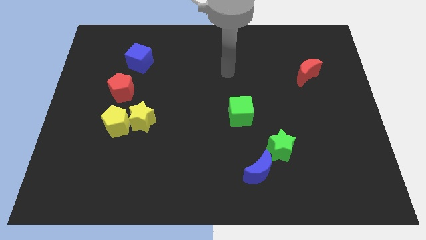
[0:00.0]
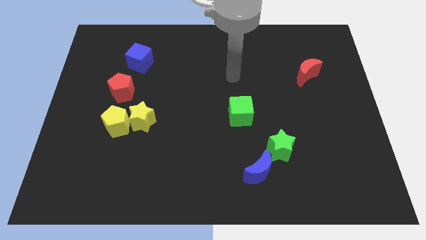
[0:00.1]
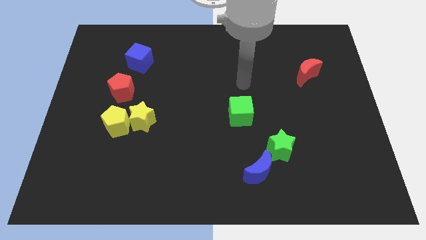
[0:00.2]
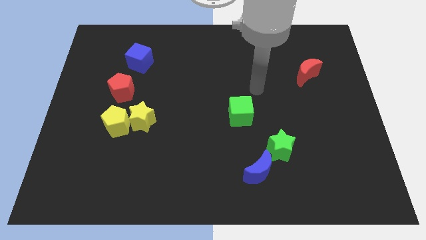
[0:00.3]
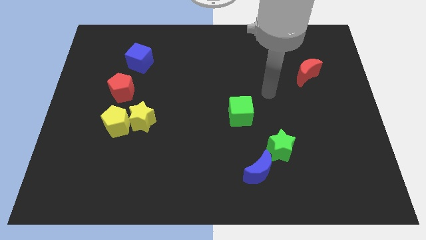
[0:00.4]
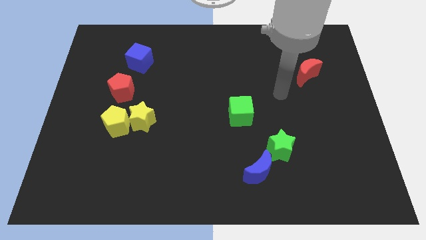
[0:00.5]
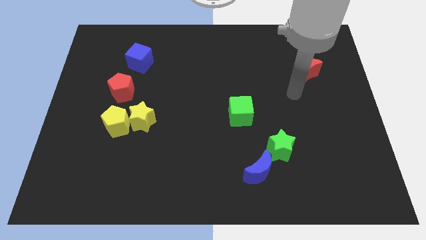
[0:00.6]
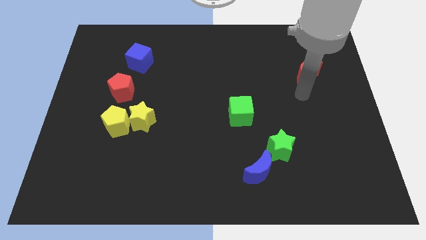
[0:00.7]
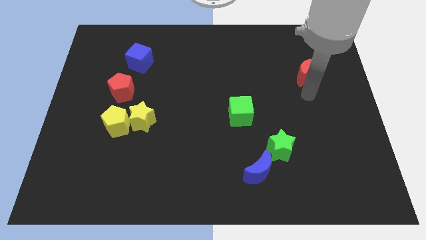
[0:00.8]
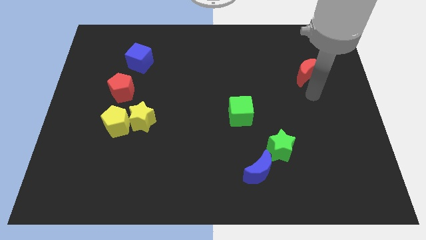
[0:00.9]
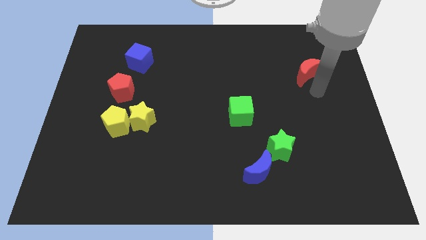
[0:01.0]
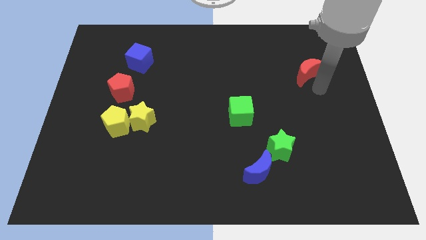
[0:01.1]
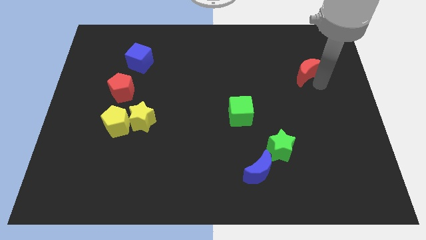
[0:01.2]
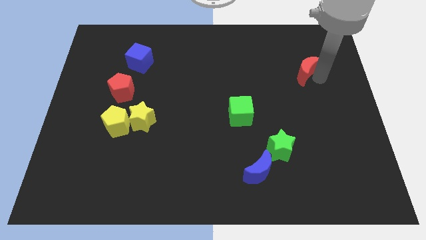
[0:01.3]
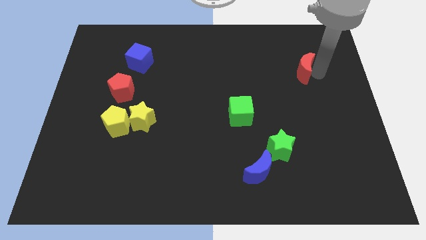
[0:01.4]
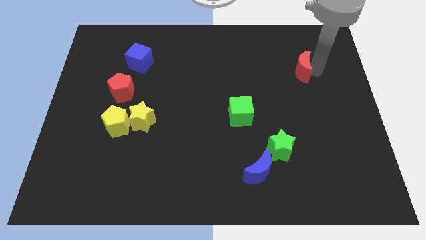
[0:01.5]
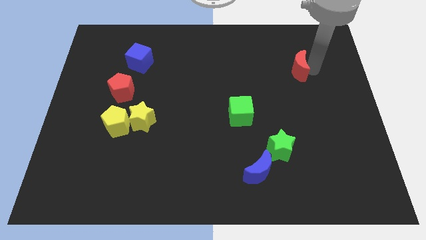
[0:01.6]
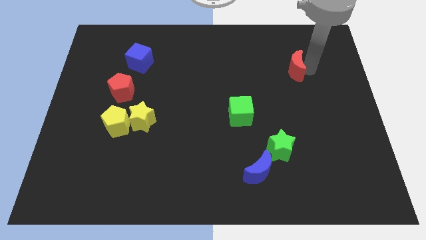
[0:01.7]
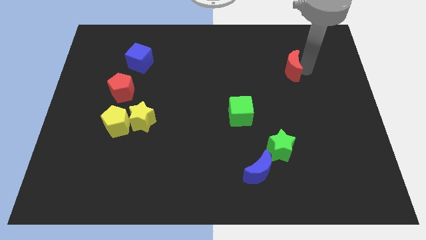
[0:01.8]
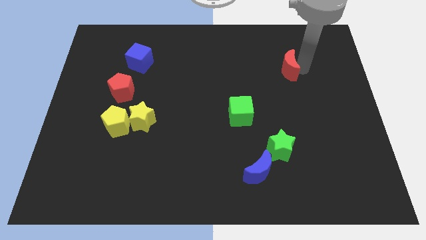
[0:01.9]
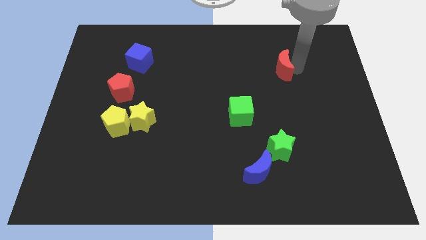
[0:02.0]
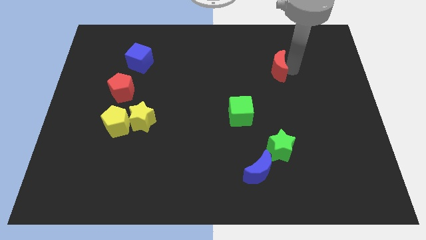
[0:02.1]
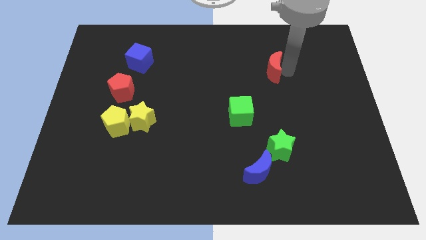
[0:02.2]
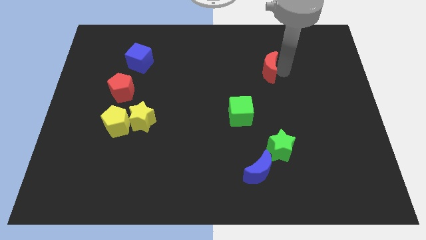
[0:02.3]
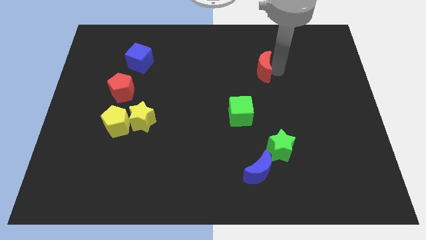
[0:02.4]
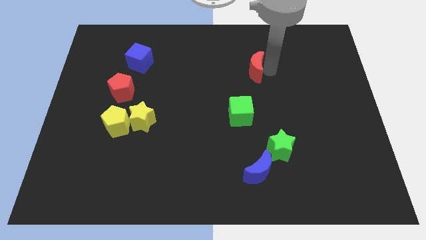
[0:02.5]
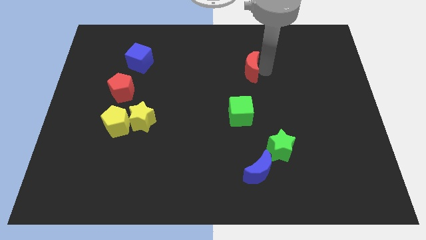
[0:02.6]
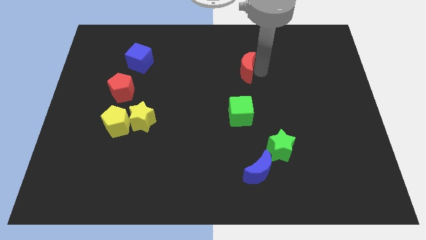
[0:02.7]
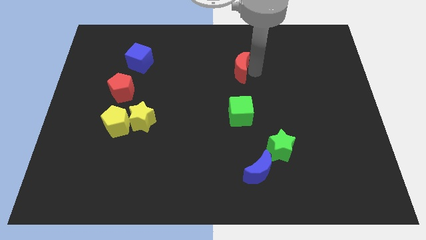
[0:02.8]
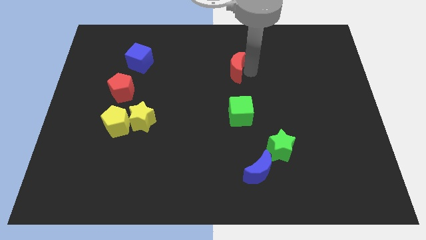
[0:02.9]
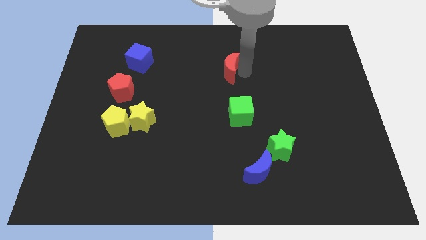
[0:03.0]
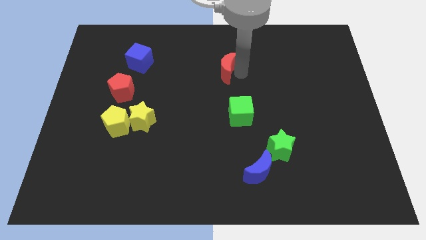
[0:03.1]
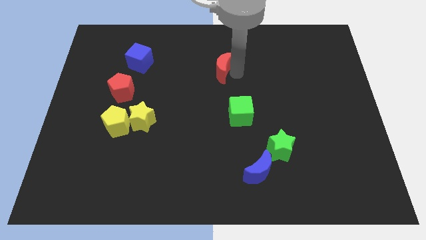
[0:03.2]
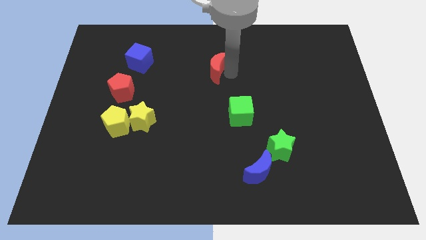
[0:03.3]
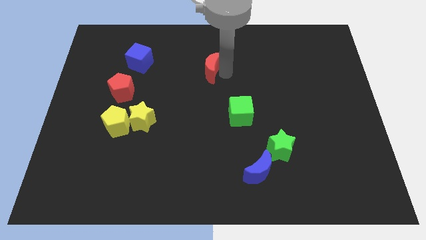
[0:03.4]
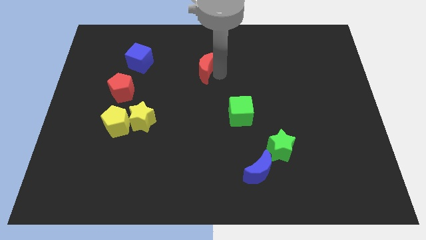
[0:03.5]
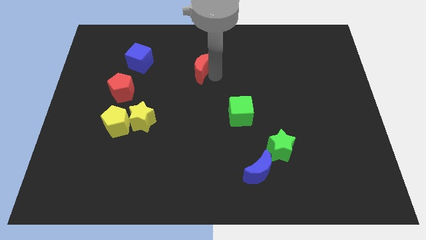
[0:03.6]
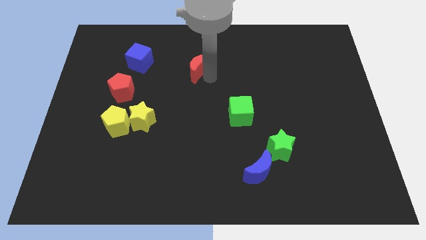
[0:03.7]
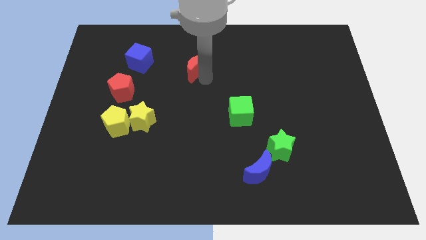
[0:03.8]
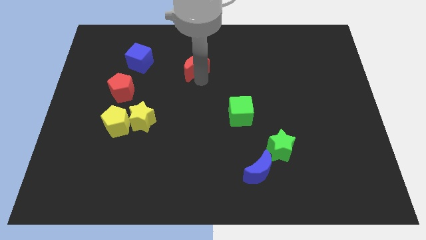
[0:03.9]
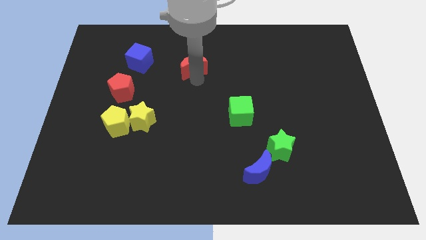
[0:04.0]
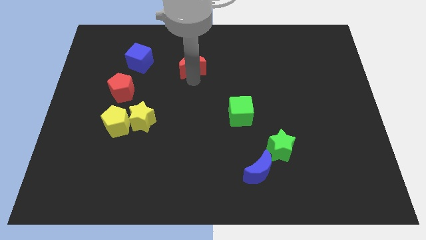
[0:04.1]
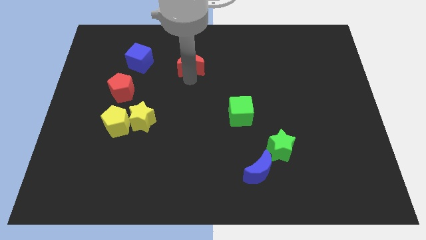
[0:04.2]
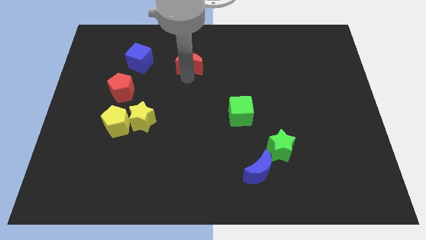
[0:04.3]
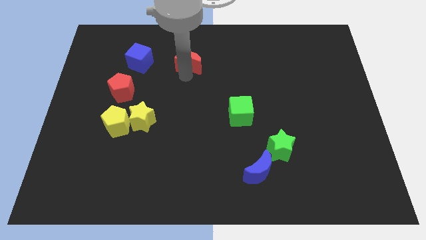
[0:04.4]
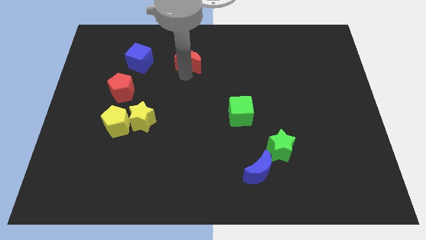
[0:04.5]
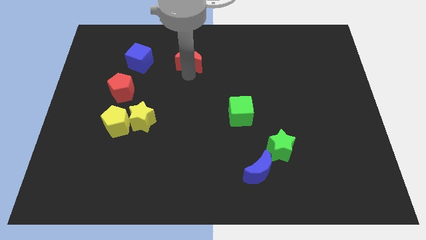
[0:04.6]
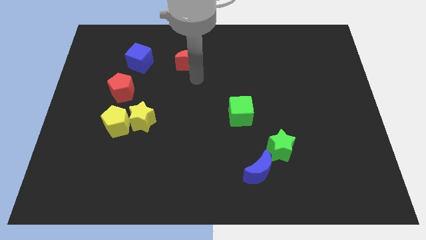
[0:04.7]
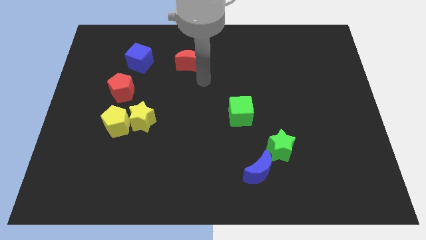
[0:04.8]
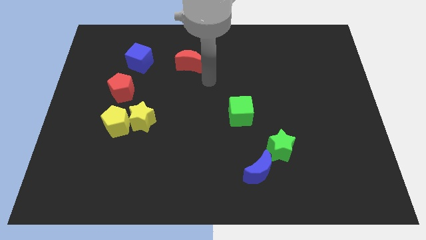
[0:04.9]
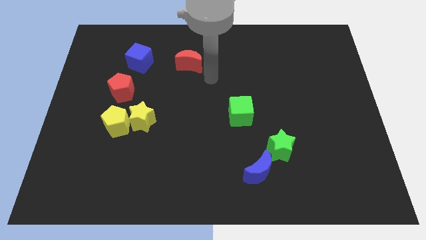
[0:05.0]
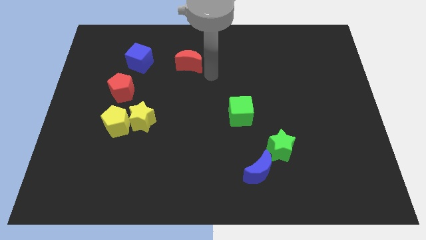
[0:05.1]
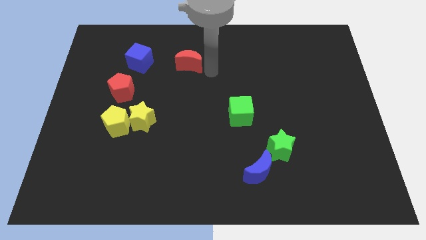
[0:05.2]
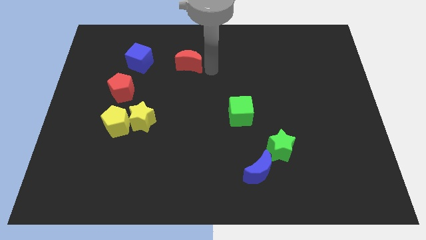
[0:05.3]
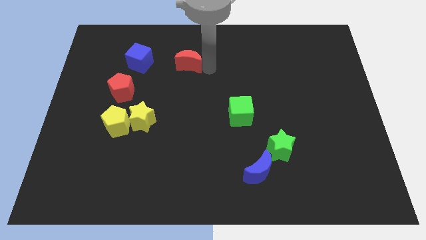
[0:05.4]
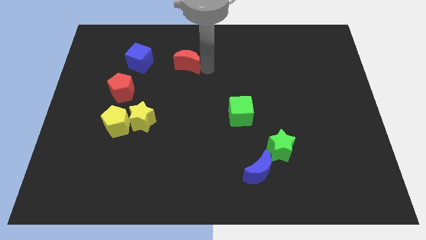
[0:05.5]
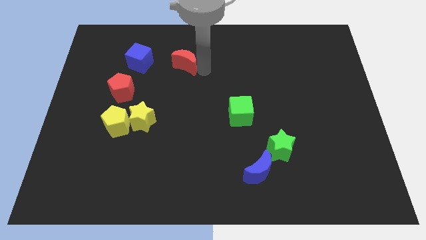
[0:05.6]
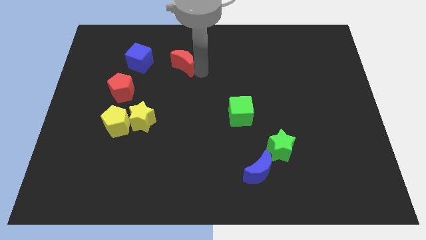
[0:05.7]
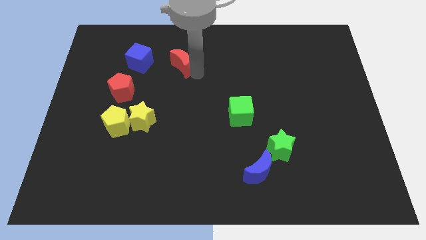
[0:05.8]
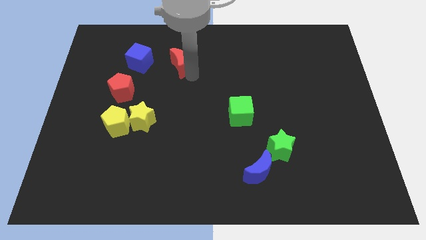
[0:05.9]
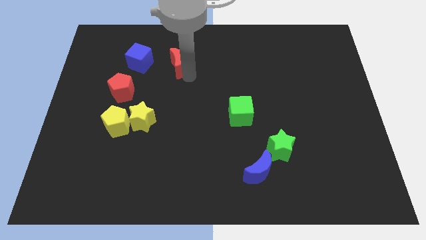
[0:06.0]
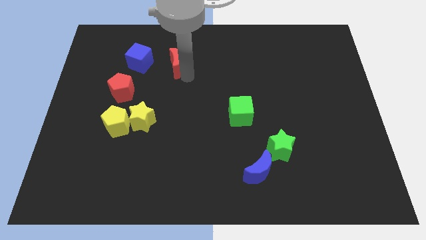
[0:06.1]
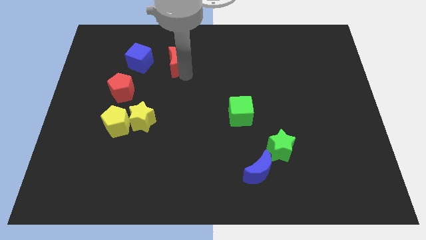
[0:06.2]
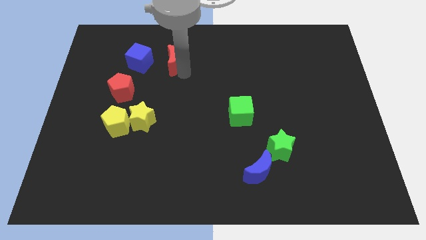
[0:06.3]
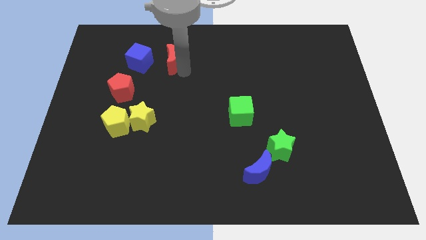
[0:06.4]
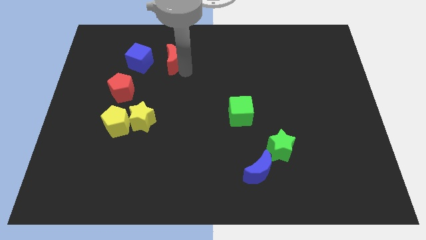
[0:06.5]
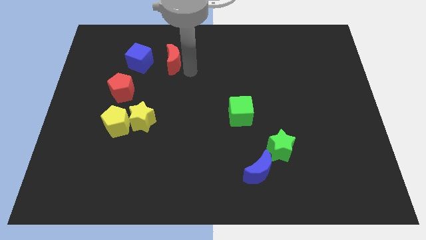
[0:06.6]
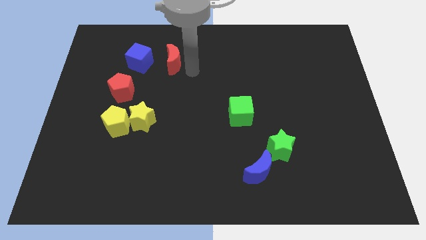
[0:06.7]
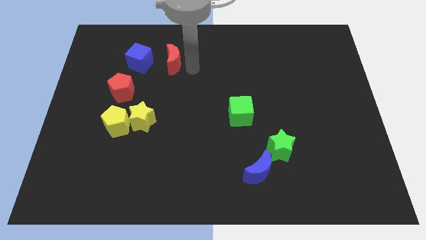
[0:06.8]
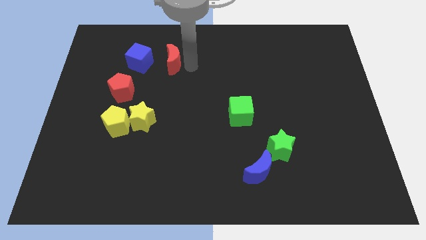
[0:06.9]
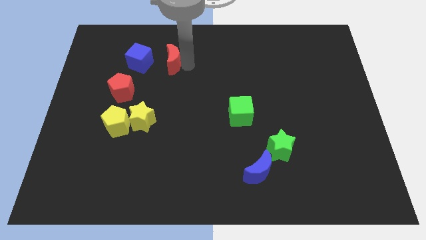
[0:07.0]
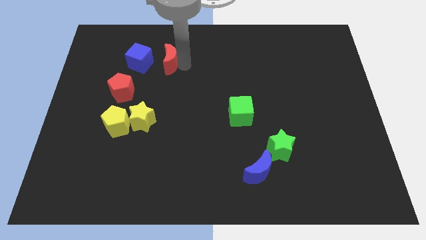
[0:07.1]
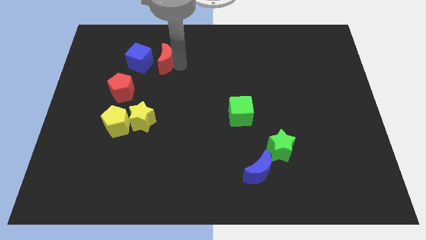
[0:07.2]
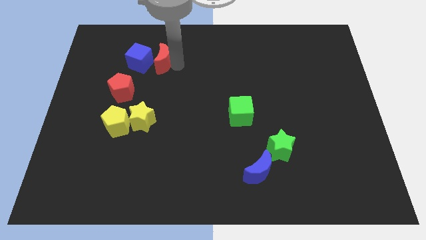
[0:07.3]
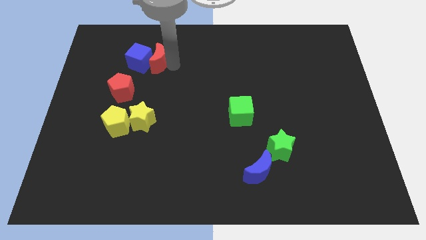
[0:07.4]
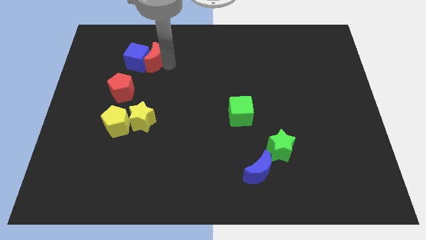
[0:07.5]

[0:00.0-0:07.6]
slide the red moon towards the blue cube

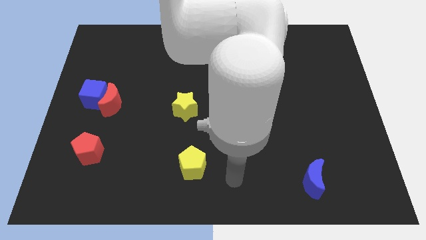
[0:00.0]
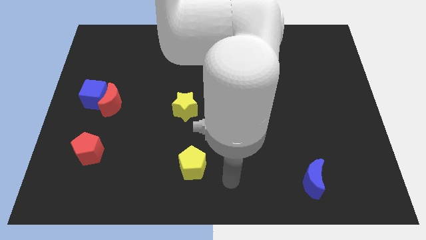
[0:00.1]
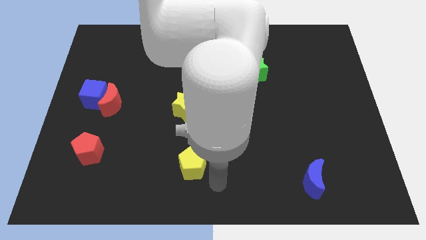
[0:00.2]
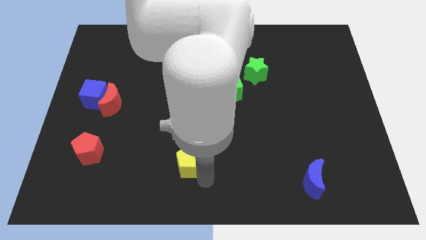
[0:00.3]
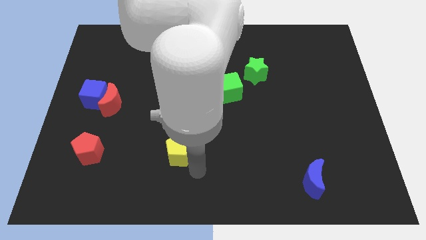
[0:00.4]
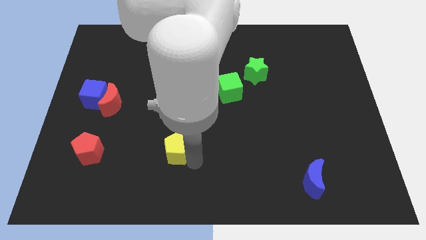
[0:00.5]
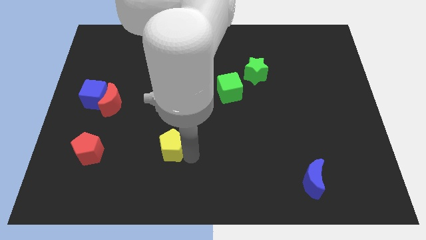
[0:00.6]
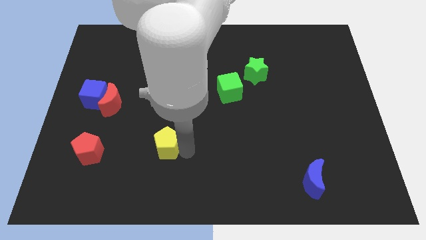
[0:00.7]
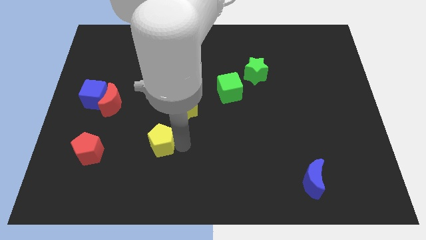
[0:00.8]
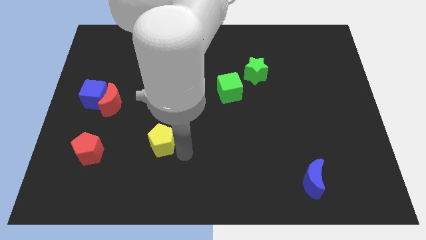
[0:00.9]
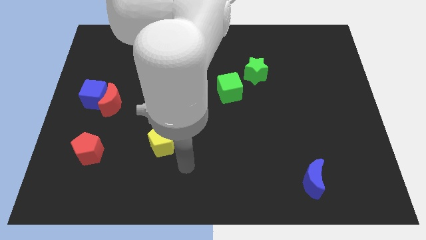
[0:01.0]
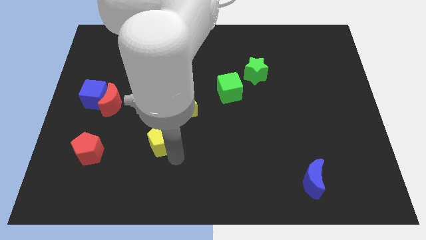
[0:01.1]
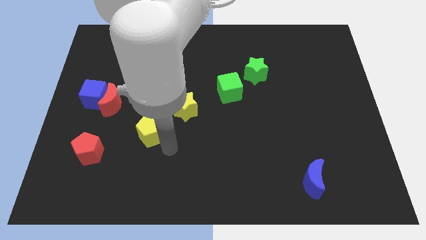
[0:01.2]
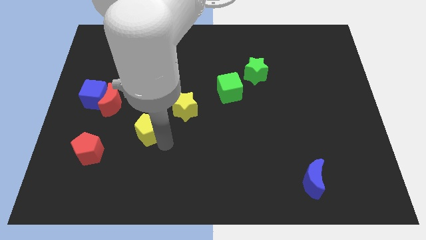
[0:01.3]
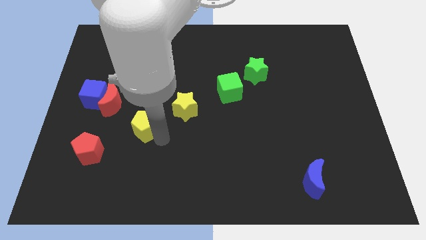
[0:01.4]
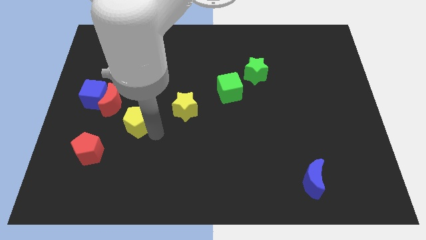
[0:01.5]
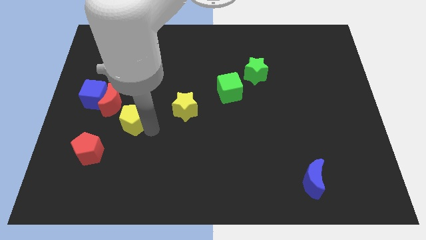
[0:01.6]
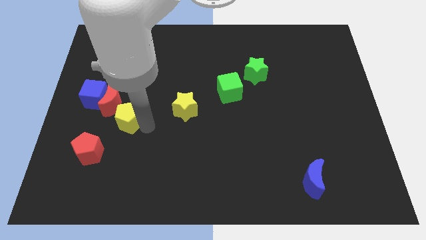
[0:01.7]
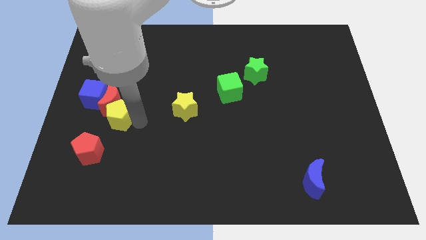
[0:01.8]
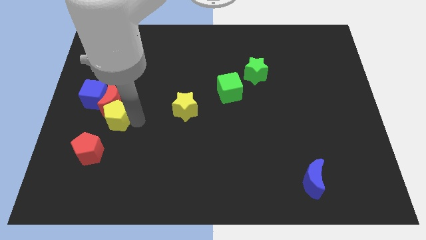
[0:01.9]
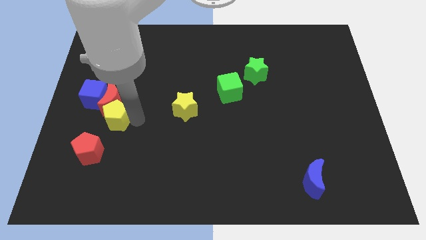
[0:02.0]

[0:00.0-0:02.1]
move the yellow pentagon towards the red moon
